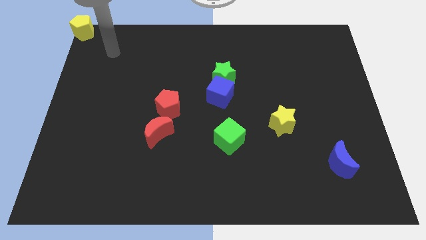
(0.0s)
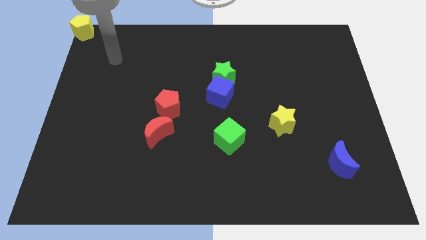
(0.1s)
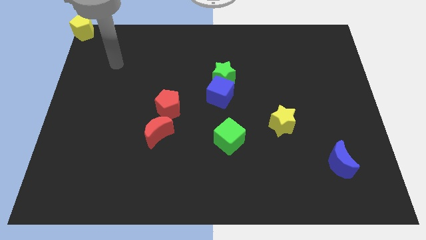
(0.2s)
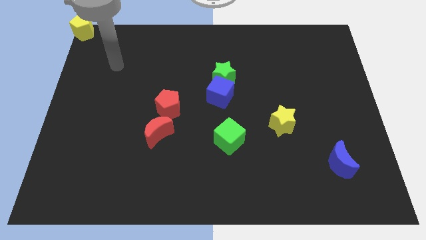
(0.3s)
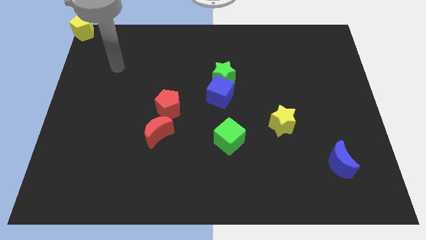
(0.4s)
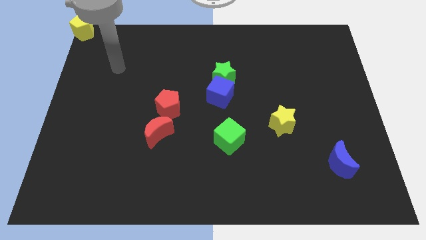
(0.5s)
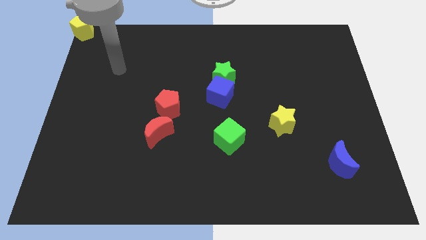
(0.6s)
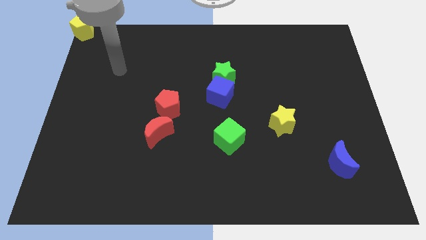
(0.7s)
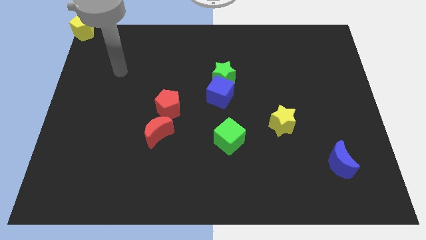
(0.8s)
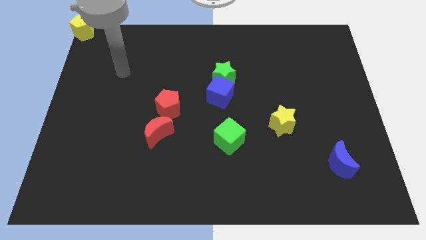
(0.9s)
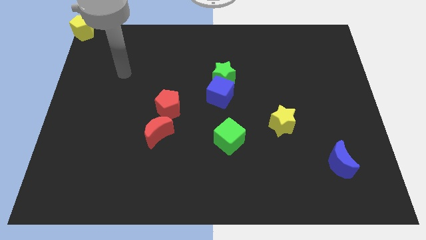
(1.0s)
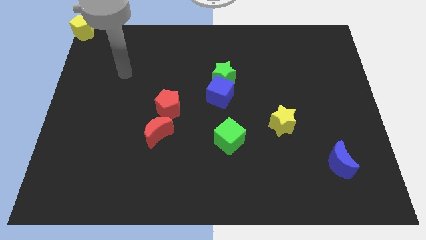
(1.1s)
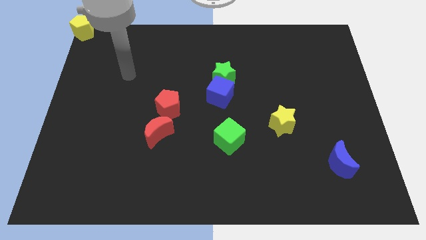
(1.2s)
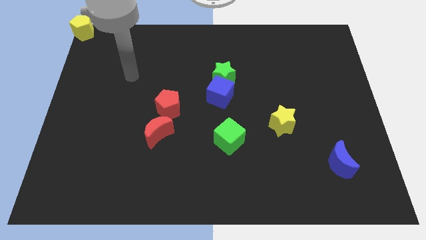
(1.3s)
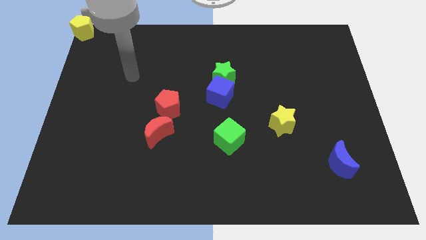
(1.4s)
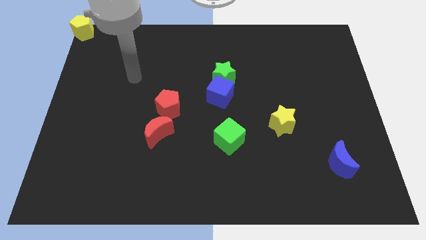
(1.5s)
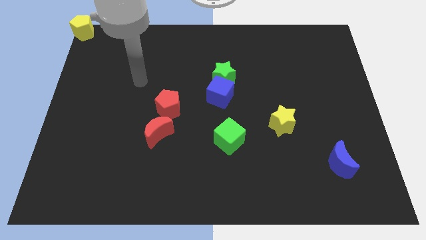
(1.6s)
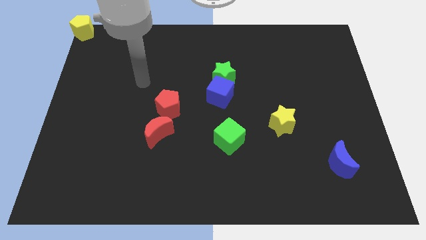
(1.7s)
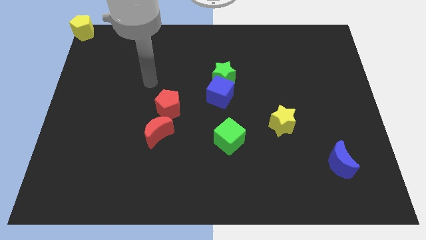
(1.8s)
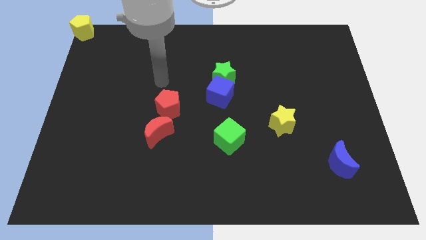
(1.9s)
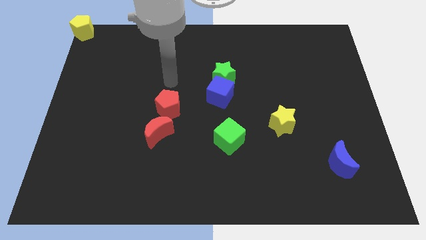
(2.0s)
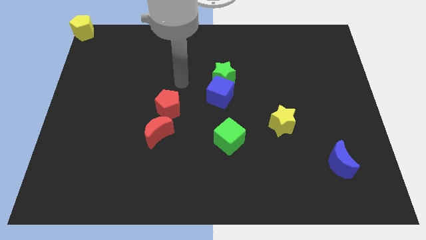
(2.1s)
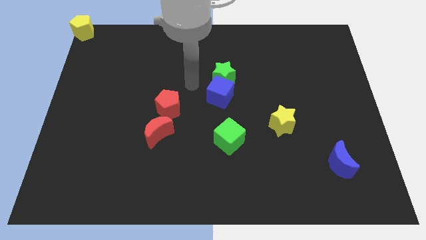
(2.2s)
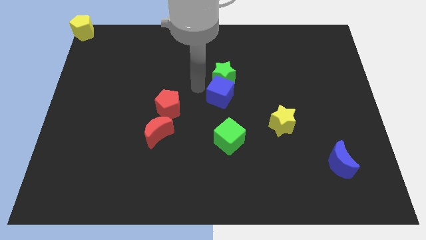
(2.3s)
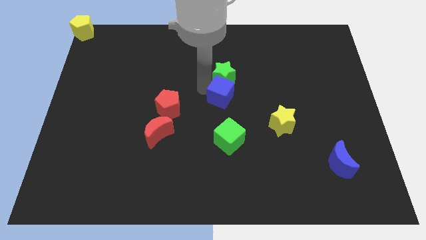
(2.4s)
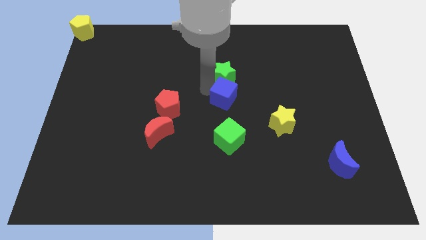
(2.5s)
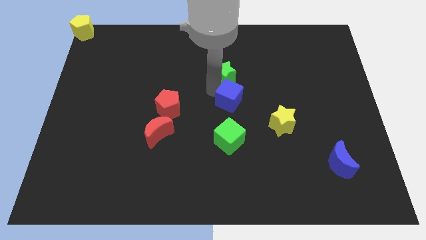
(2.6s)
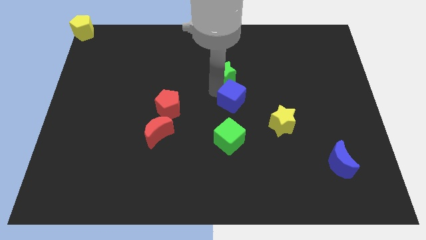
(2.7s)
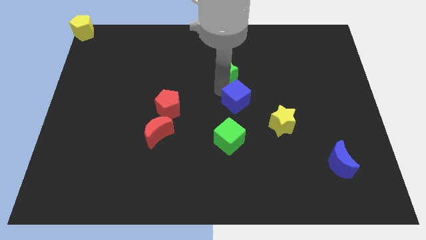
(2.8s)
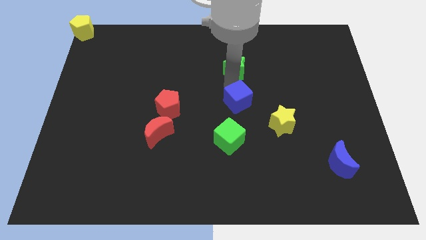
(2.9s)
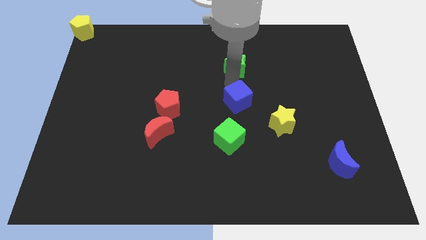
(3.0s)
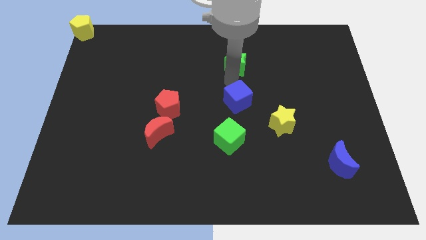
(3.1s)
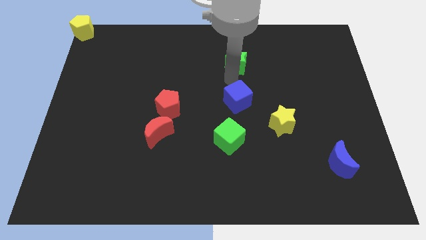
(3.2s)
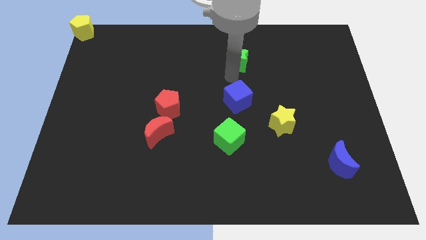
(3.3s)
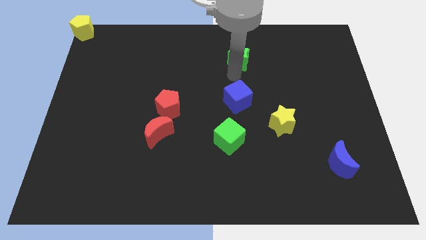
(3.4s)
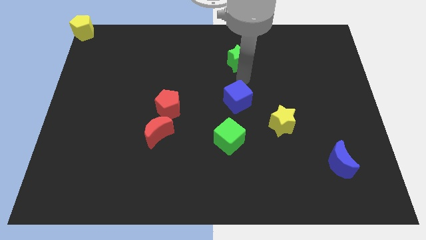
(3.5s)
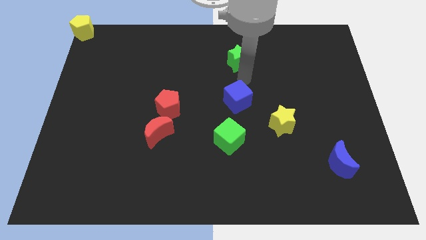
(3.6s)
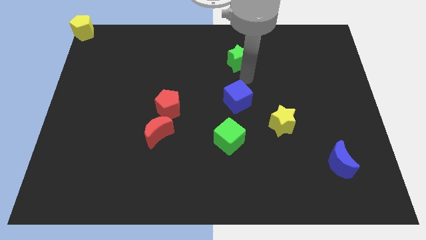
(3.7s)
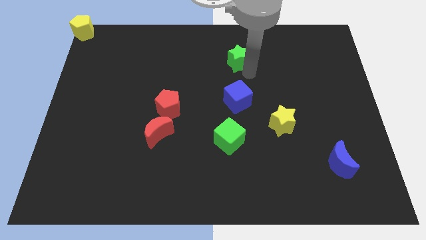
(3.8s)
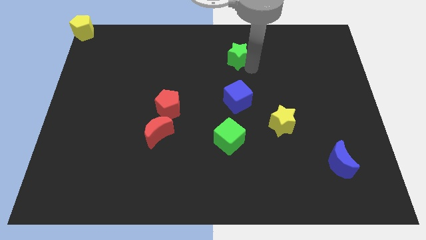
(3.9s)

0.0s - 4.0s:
separate the green star from blue cube

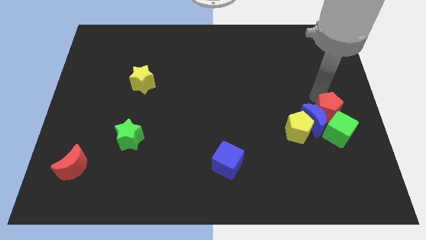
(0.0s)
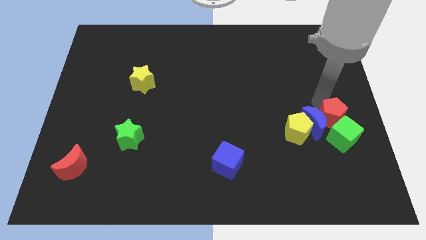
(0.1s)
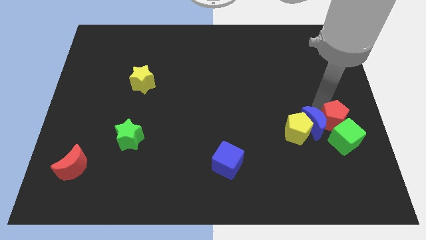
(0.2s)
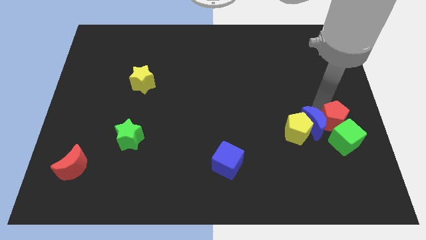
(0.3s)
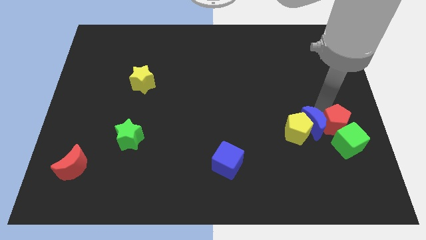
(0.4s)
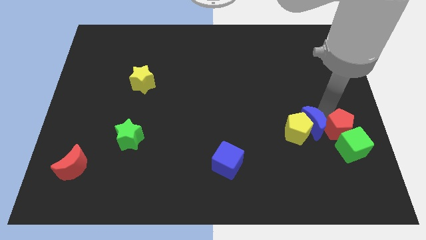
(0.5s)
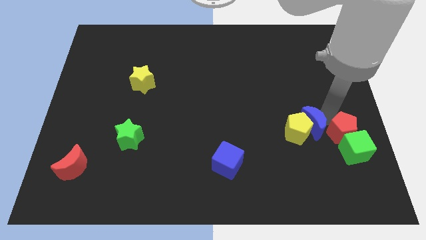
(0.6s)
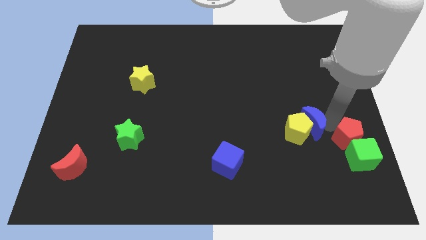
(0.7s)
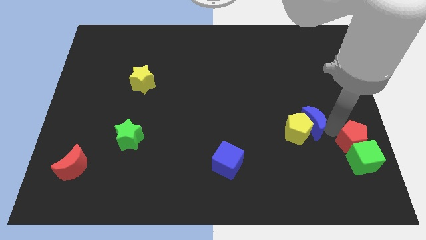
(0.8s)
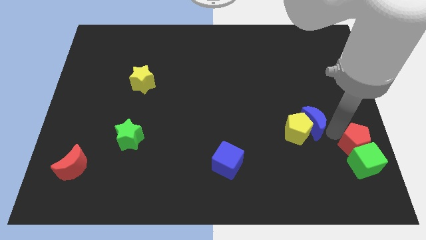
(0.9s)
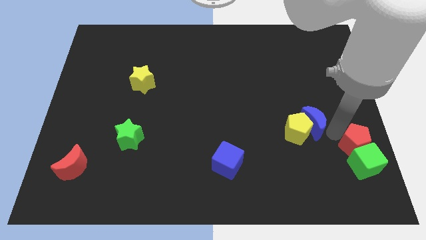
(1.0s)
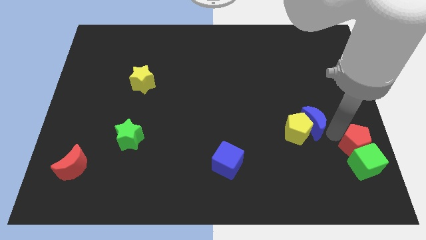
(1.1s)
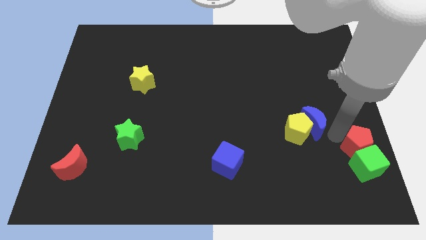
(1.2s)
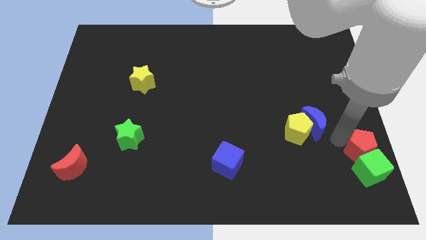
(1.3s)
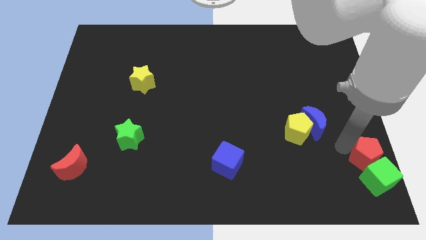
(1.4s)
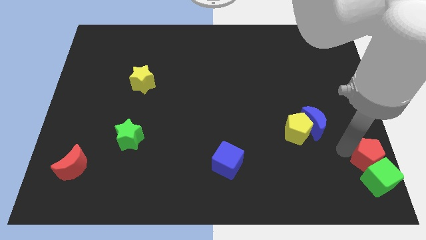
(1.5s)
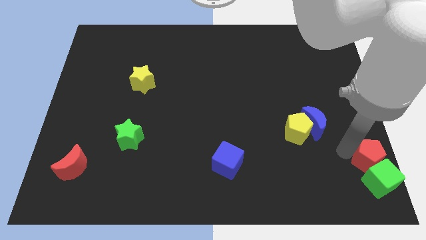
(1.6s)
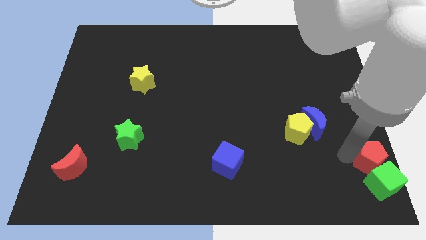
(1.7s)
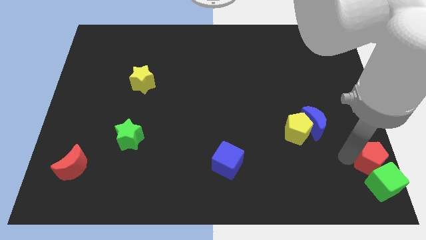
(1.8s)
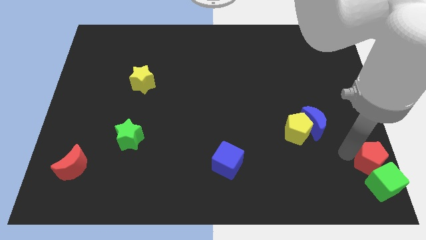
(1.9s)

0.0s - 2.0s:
push red pentagon along with green cube to the bottom right

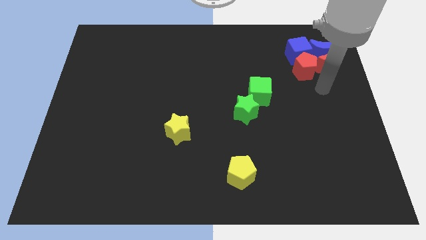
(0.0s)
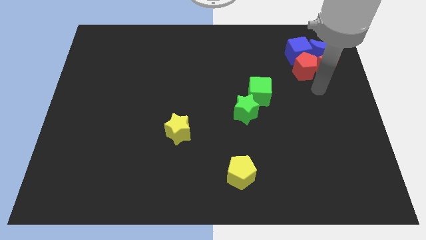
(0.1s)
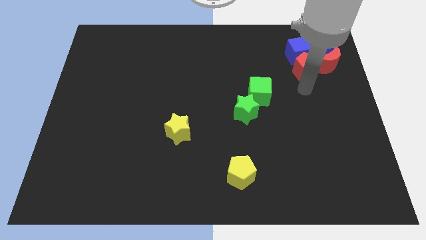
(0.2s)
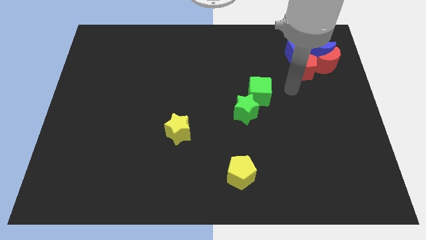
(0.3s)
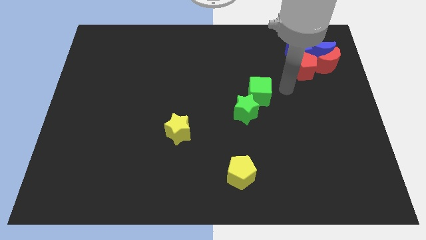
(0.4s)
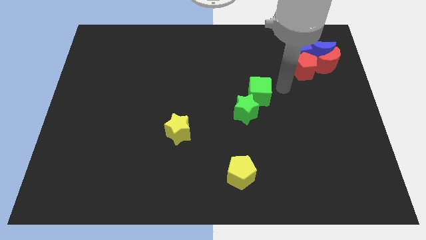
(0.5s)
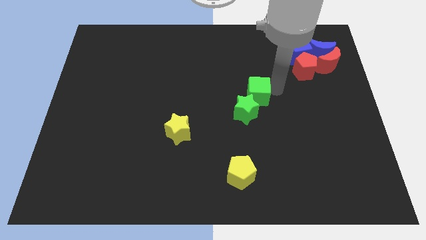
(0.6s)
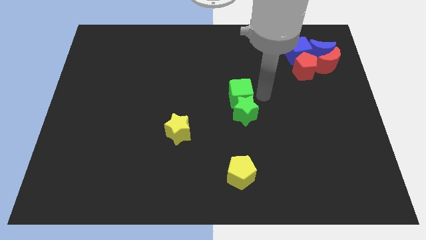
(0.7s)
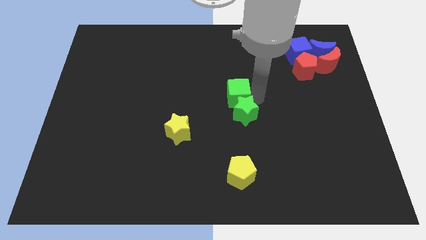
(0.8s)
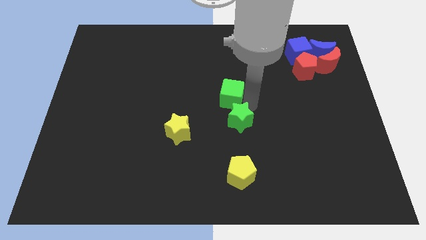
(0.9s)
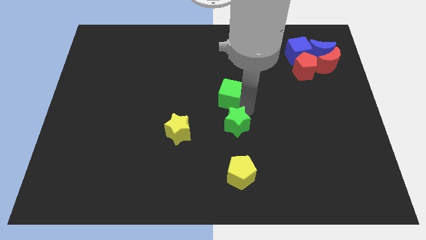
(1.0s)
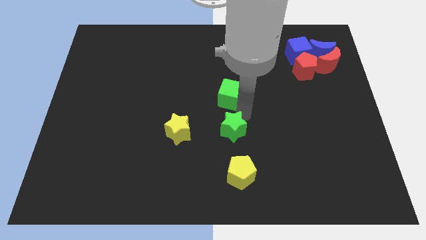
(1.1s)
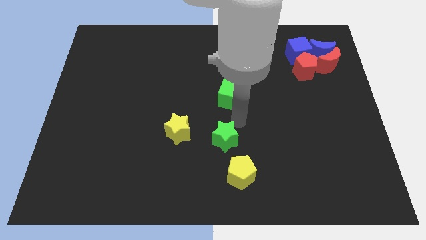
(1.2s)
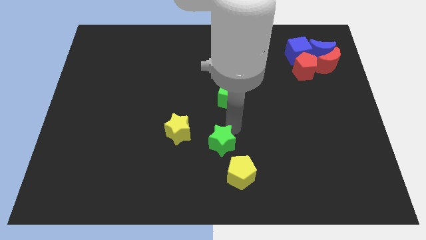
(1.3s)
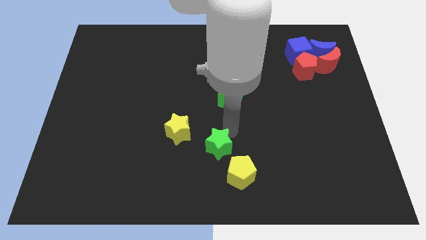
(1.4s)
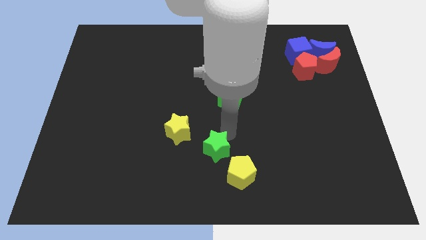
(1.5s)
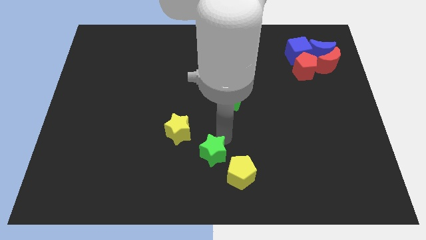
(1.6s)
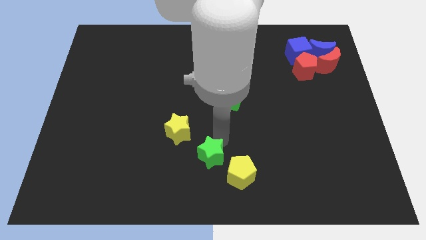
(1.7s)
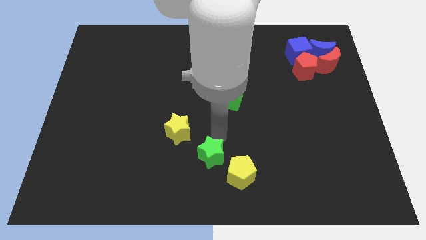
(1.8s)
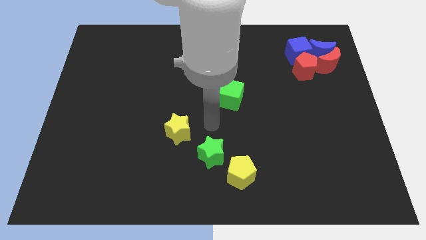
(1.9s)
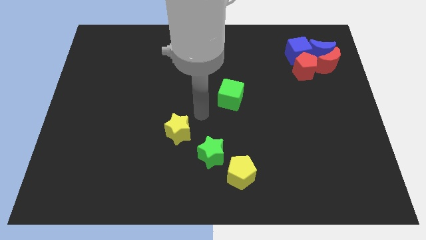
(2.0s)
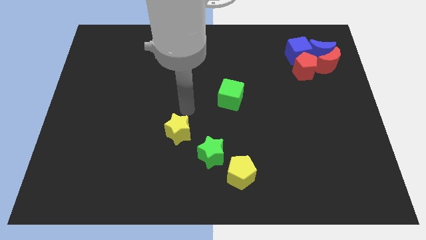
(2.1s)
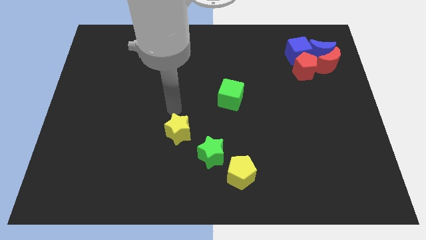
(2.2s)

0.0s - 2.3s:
put the green star diagonally in between the yellow star and the yellow pentagon

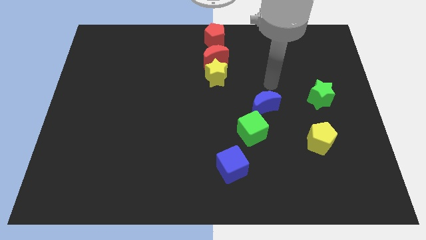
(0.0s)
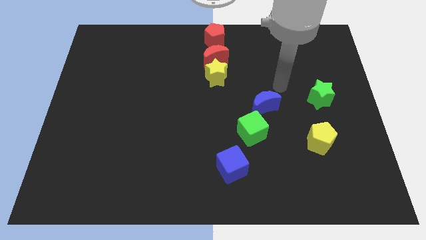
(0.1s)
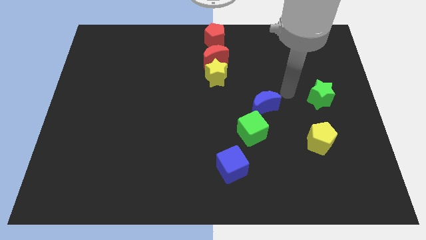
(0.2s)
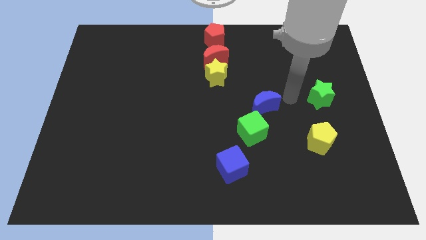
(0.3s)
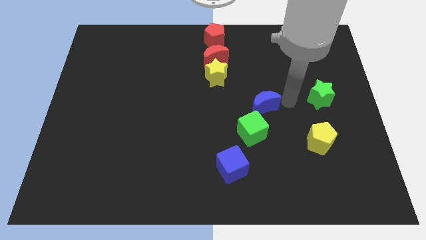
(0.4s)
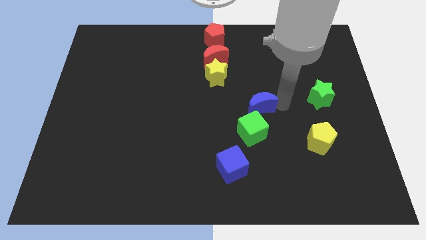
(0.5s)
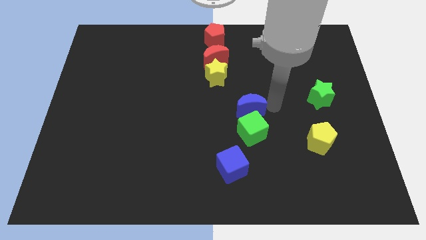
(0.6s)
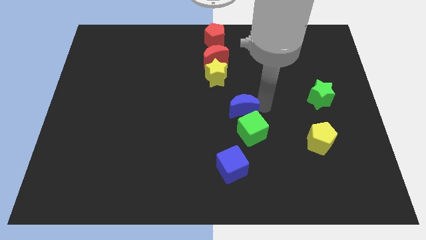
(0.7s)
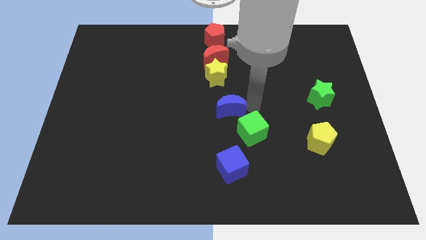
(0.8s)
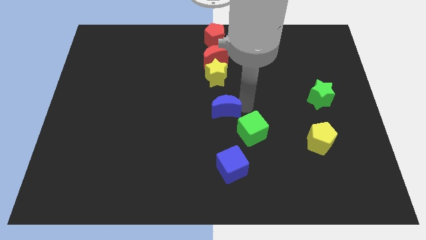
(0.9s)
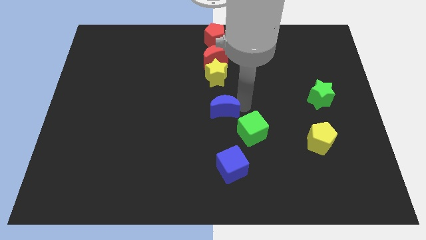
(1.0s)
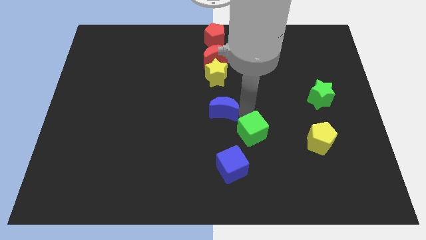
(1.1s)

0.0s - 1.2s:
slide the blue crescent slightly to the left
